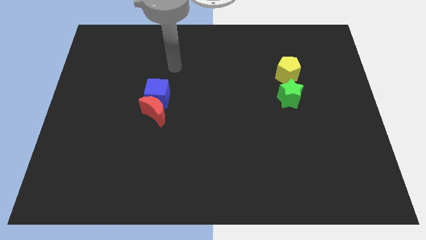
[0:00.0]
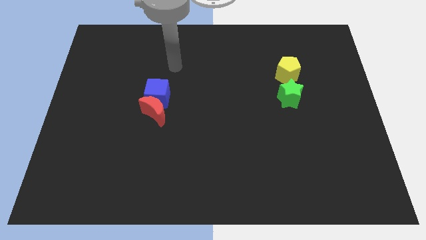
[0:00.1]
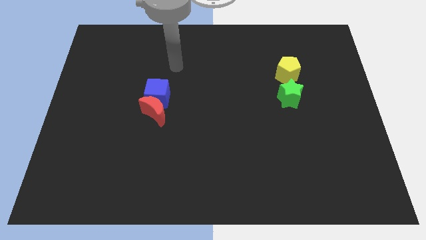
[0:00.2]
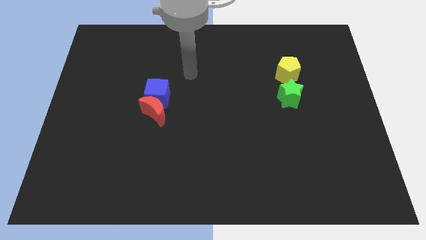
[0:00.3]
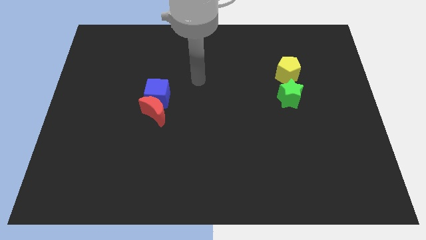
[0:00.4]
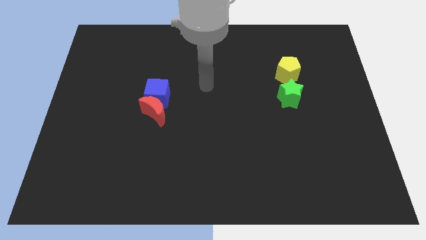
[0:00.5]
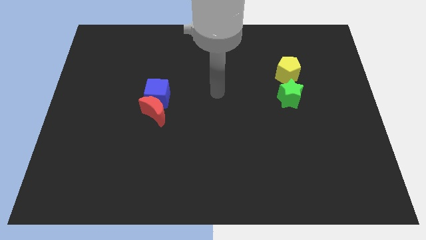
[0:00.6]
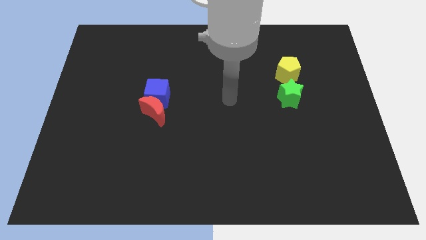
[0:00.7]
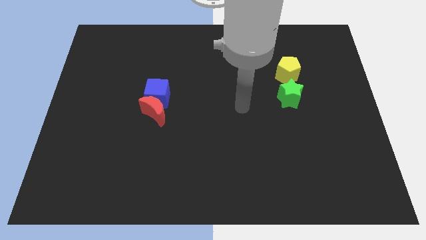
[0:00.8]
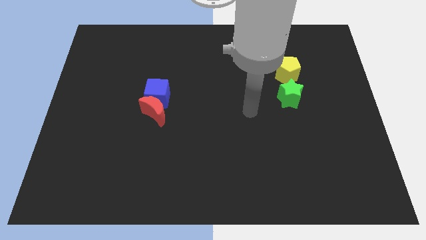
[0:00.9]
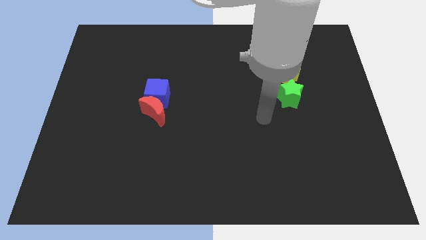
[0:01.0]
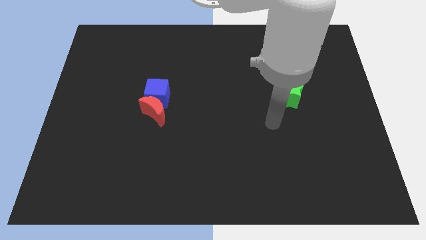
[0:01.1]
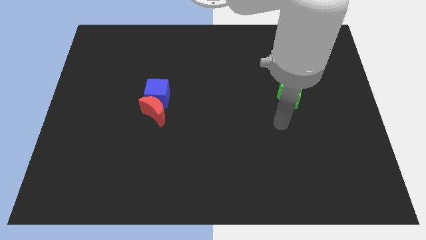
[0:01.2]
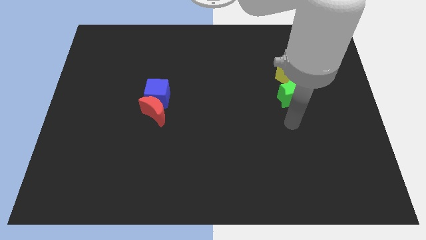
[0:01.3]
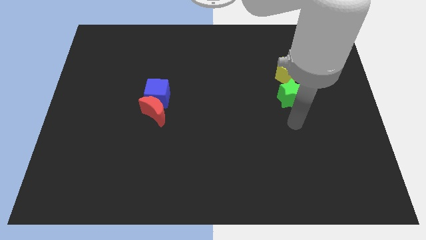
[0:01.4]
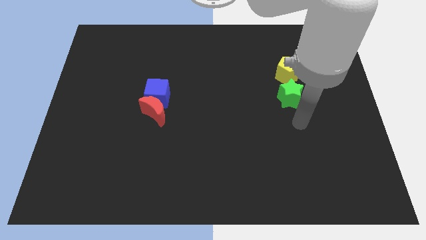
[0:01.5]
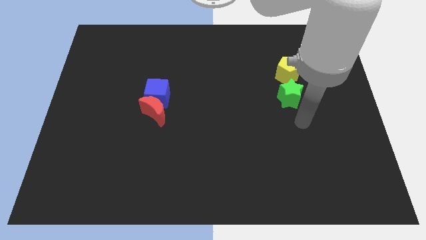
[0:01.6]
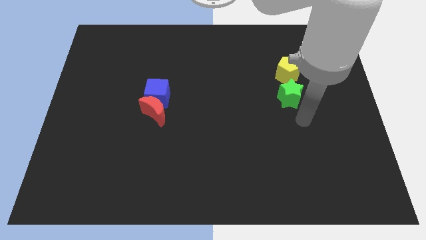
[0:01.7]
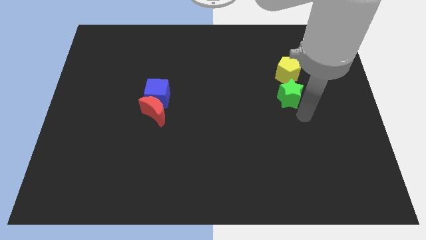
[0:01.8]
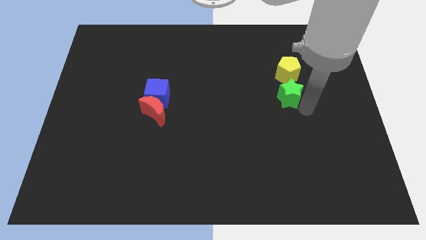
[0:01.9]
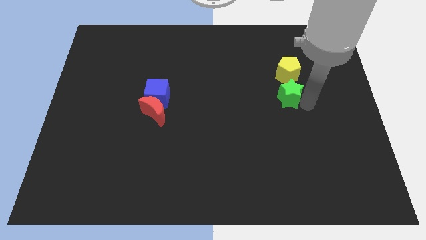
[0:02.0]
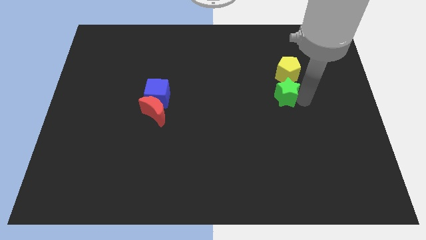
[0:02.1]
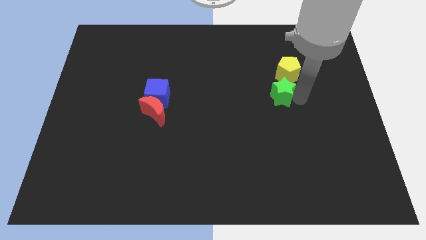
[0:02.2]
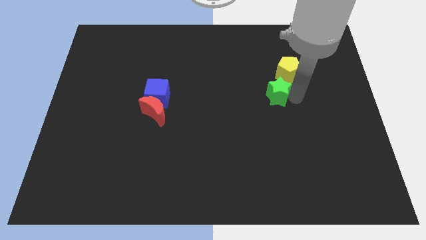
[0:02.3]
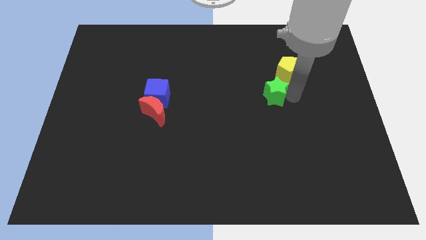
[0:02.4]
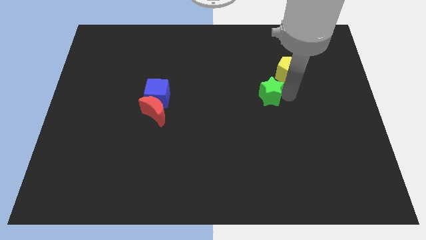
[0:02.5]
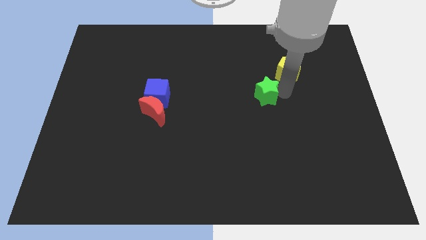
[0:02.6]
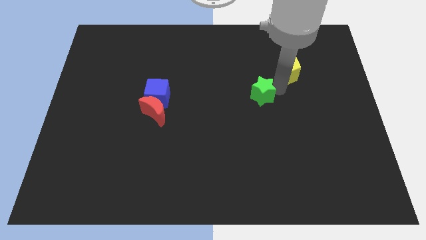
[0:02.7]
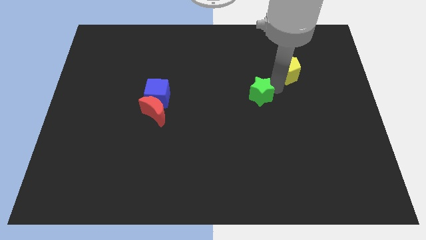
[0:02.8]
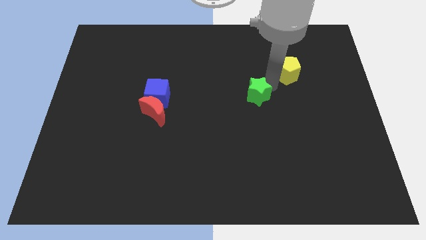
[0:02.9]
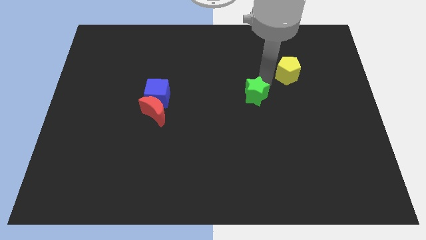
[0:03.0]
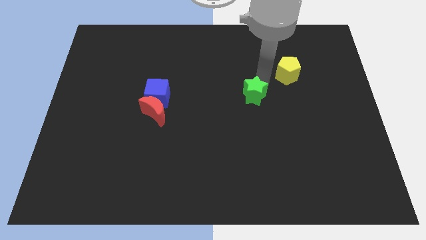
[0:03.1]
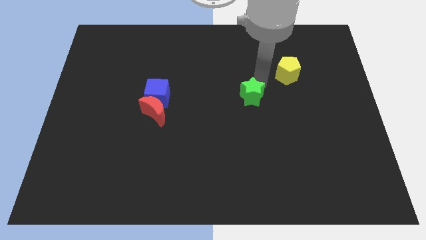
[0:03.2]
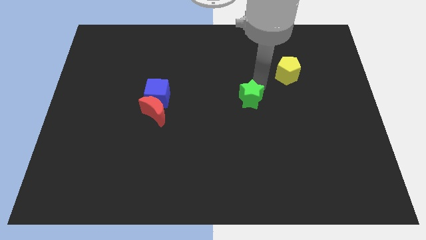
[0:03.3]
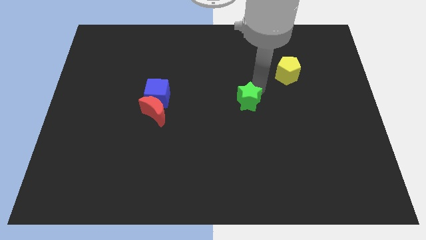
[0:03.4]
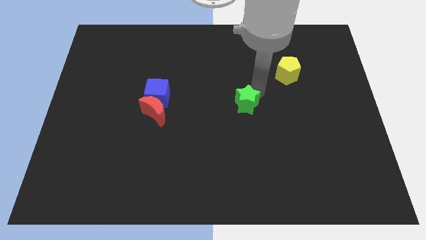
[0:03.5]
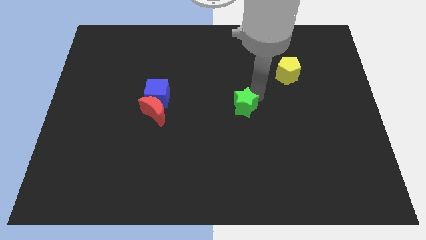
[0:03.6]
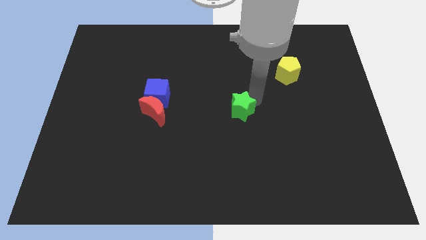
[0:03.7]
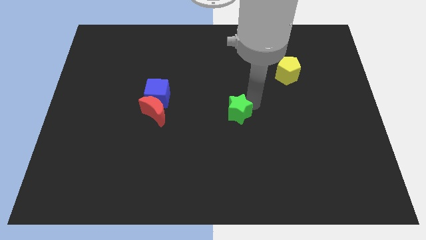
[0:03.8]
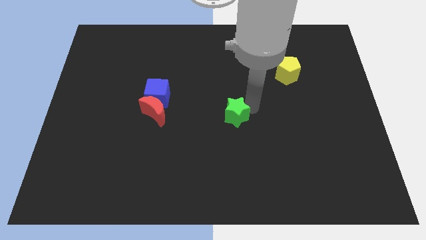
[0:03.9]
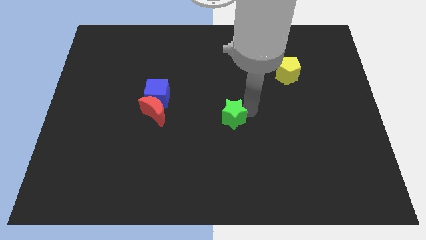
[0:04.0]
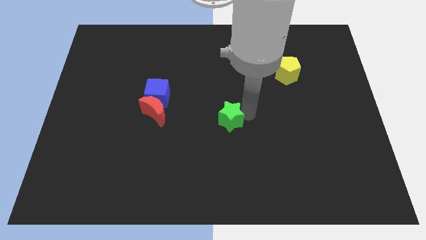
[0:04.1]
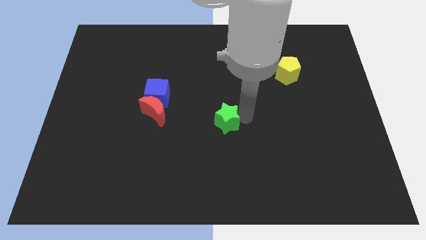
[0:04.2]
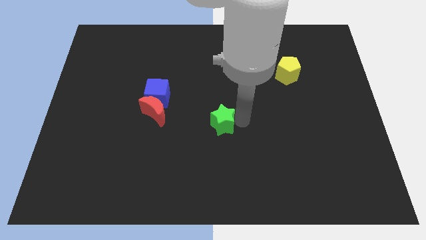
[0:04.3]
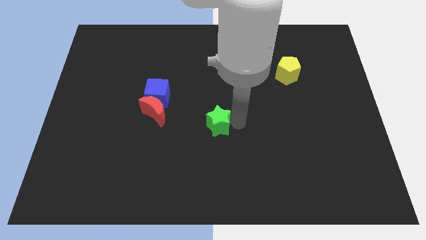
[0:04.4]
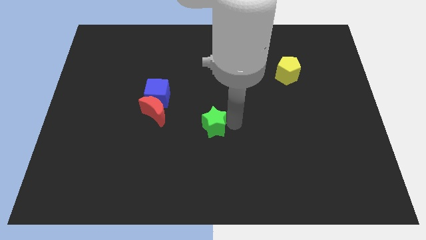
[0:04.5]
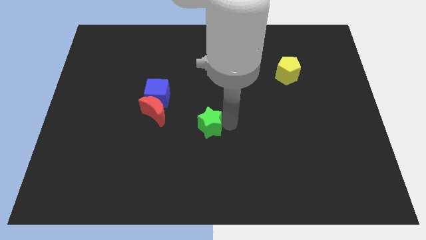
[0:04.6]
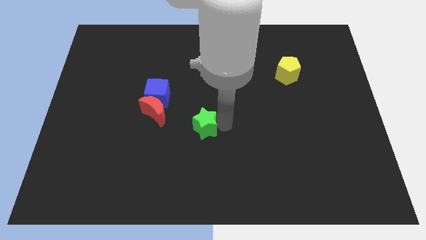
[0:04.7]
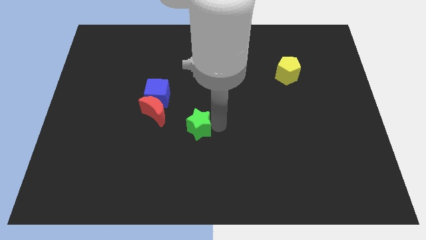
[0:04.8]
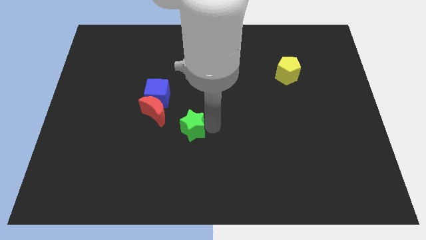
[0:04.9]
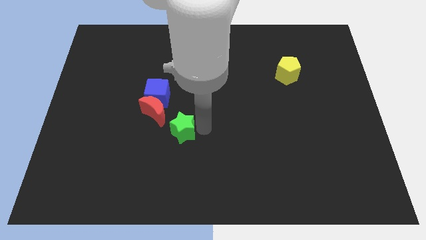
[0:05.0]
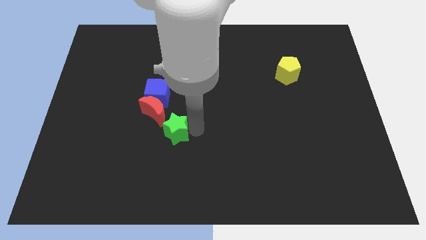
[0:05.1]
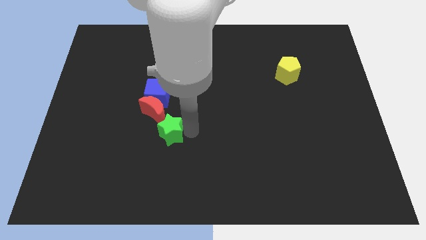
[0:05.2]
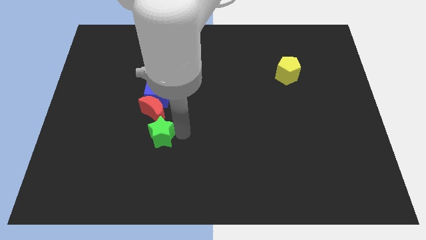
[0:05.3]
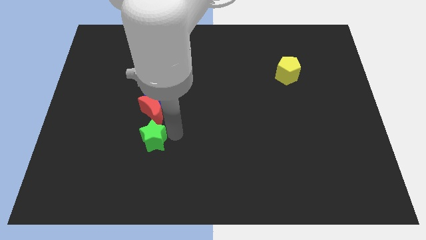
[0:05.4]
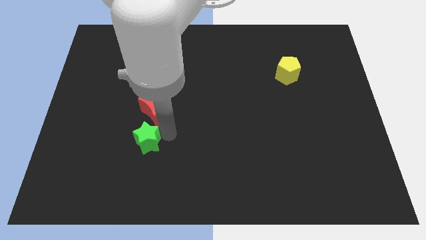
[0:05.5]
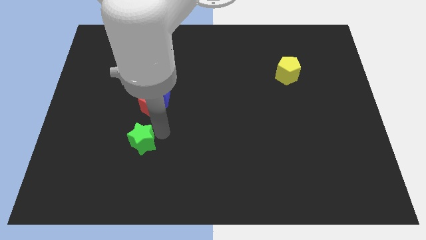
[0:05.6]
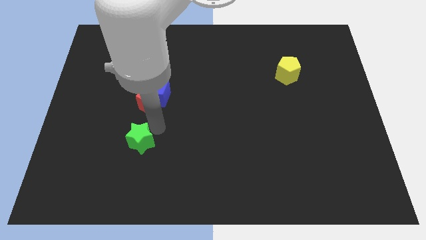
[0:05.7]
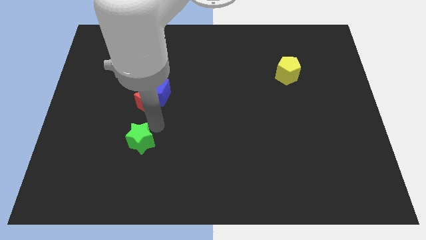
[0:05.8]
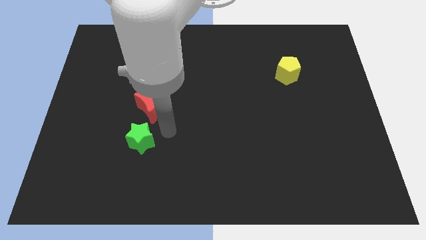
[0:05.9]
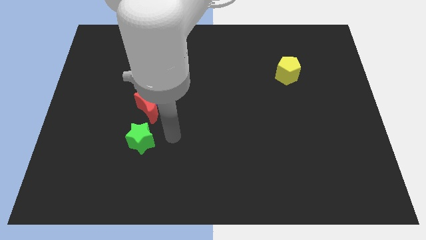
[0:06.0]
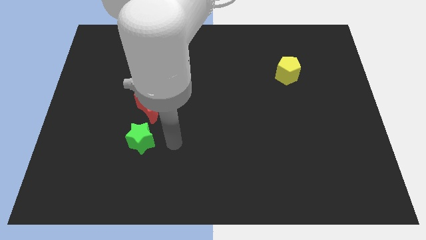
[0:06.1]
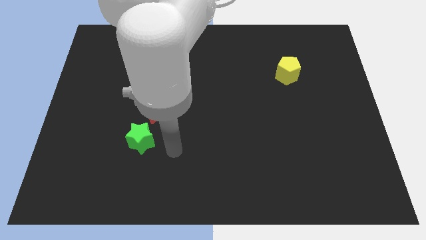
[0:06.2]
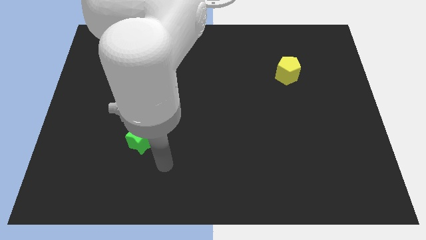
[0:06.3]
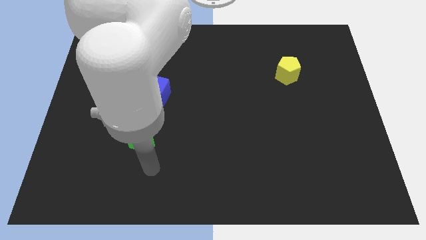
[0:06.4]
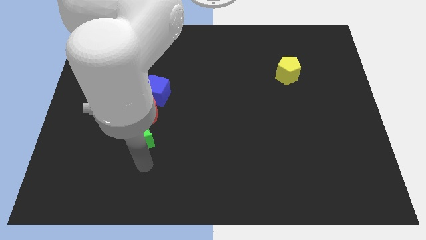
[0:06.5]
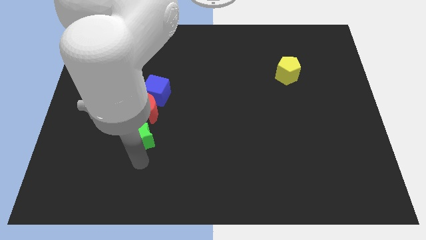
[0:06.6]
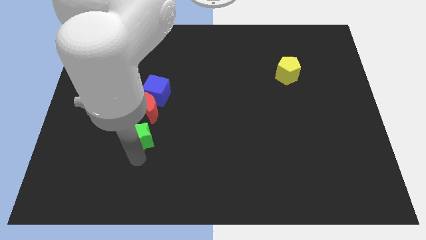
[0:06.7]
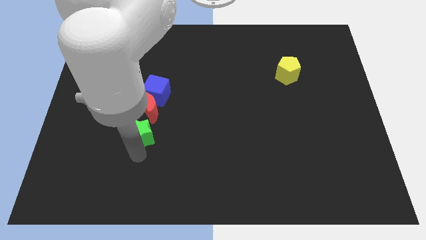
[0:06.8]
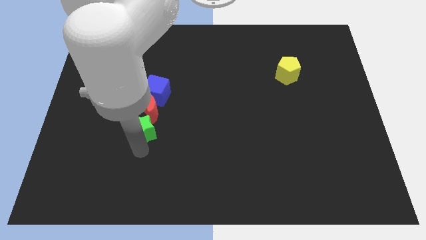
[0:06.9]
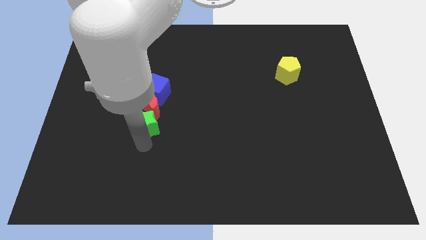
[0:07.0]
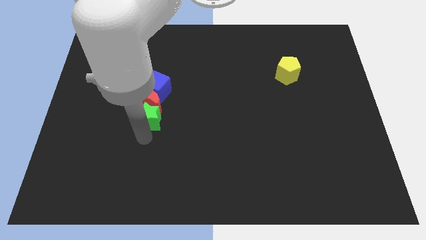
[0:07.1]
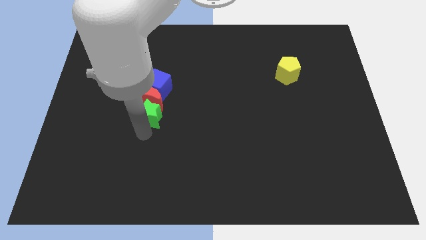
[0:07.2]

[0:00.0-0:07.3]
put the green star towards the red block

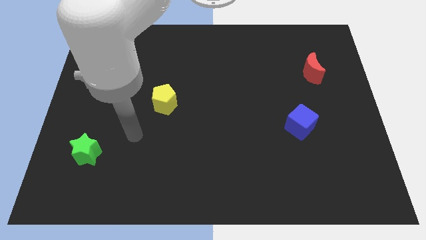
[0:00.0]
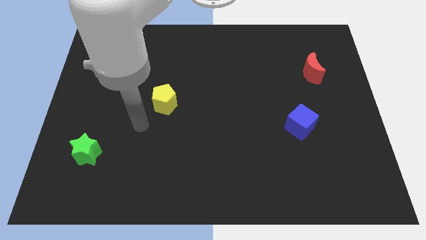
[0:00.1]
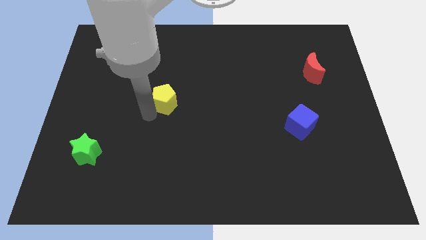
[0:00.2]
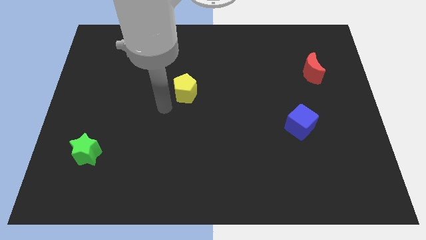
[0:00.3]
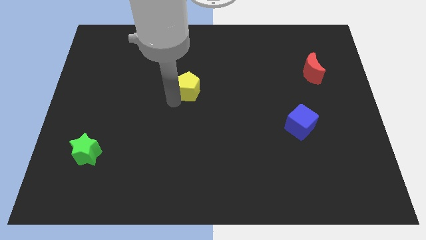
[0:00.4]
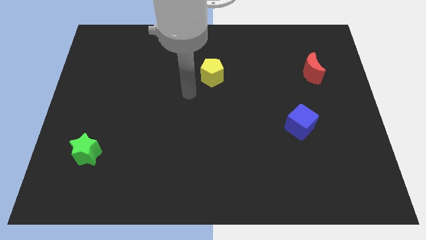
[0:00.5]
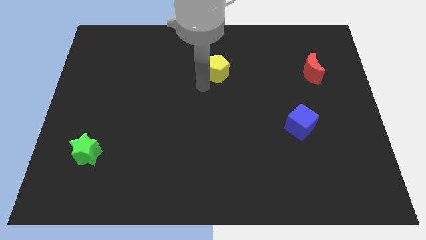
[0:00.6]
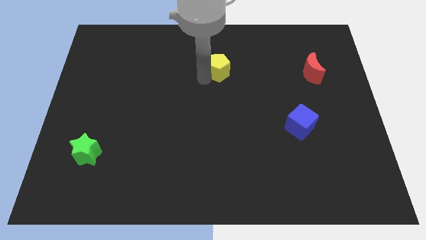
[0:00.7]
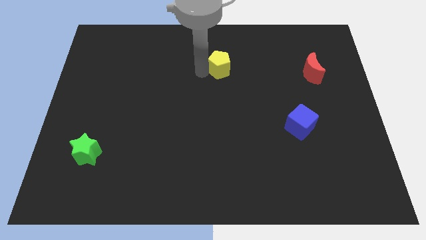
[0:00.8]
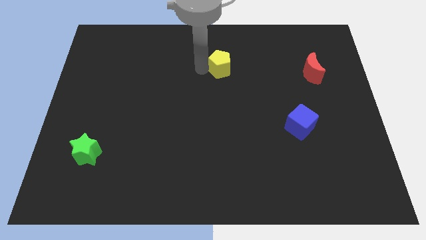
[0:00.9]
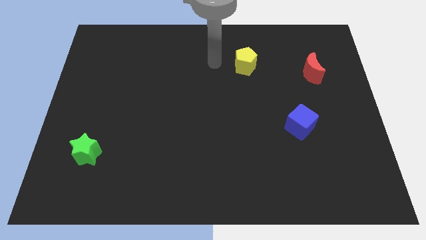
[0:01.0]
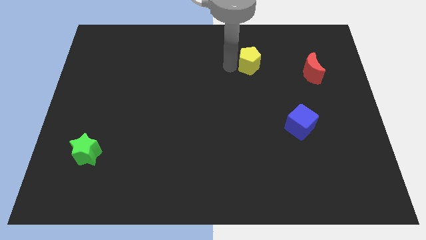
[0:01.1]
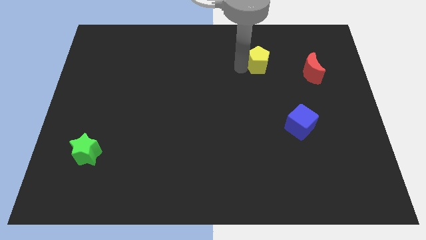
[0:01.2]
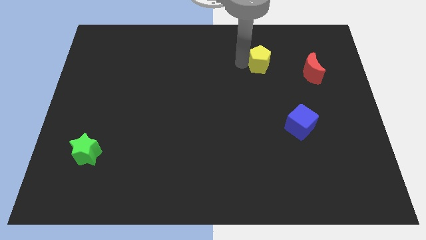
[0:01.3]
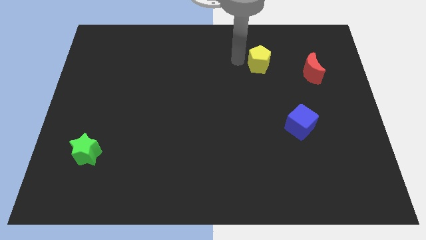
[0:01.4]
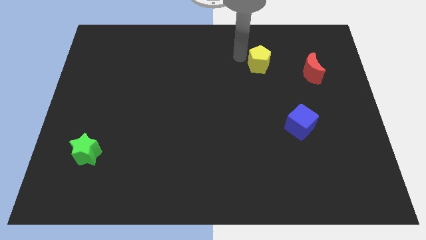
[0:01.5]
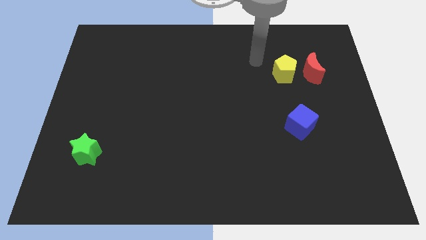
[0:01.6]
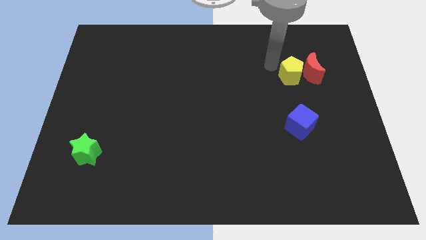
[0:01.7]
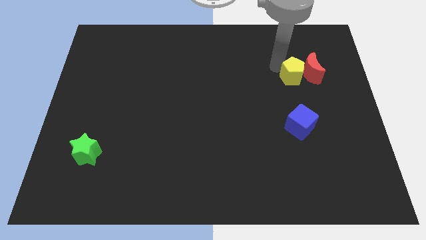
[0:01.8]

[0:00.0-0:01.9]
slide the yellow pentagon towards the moon
